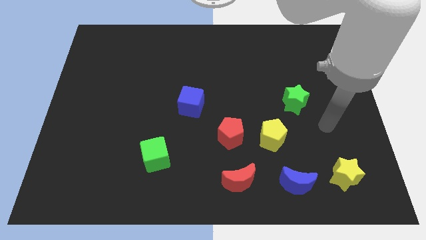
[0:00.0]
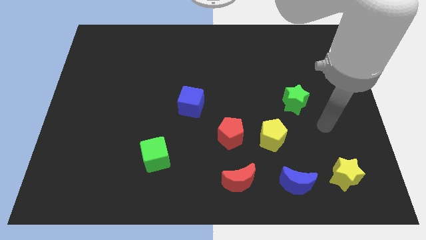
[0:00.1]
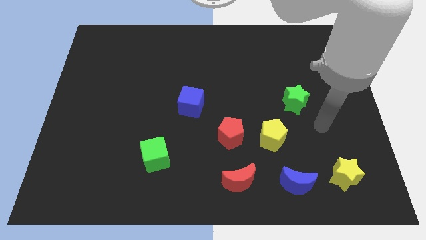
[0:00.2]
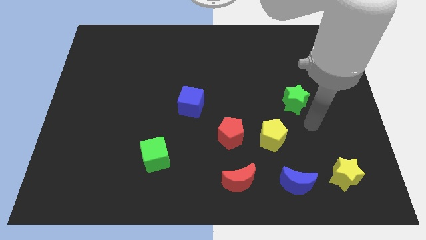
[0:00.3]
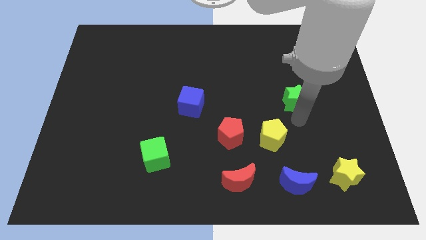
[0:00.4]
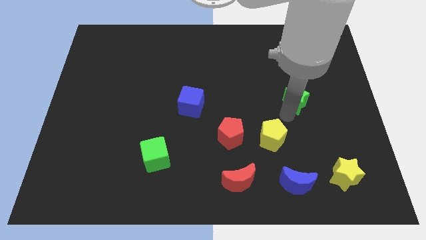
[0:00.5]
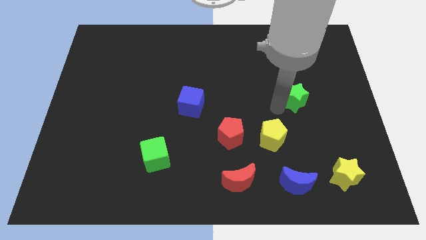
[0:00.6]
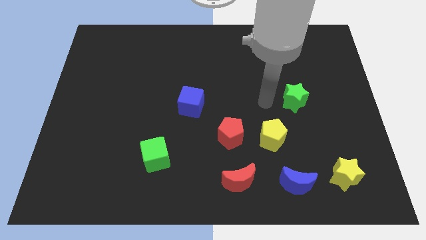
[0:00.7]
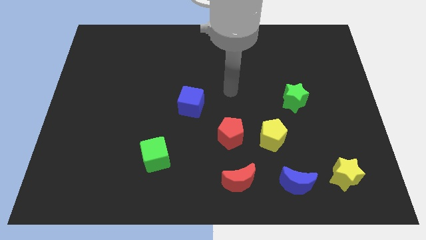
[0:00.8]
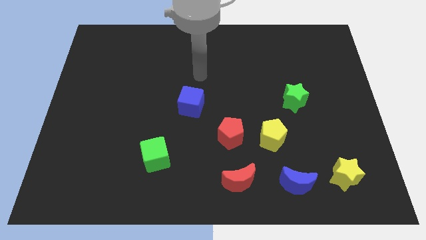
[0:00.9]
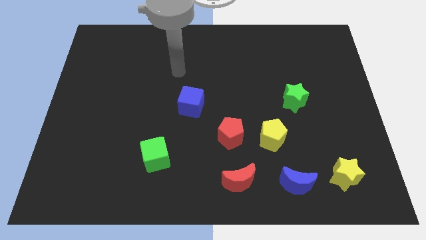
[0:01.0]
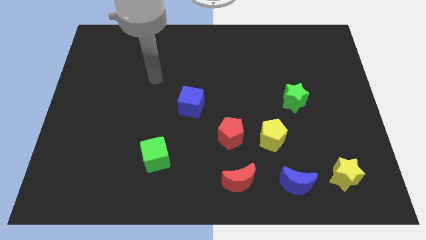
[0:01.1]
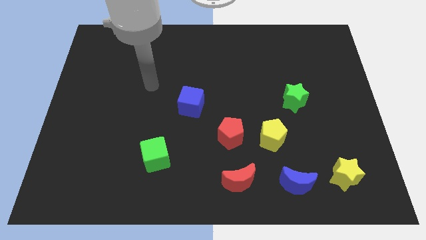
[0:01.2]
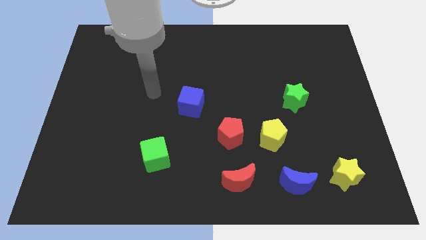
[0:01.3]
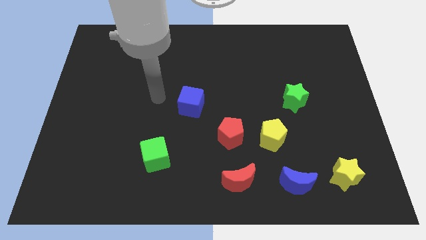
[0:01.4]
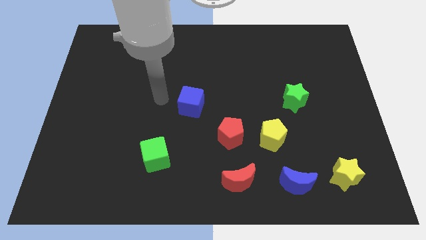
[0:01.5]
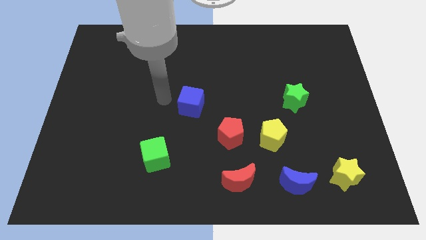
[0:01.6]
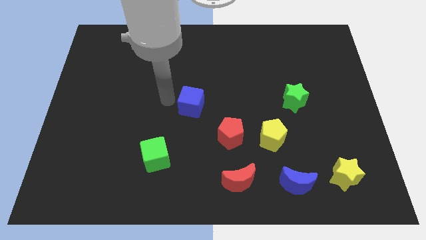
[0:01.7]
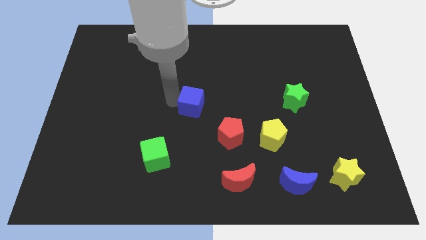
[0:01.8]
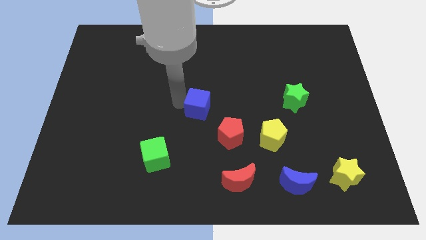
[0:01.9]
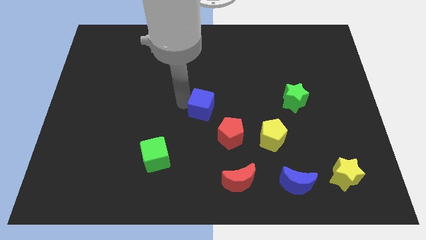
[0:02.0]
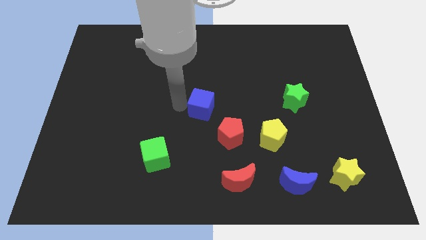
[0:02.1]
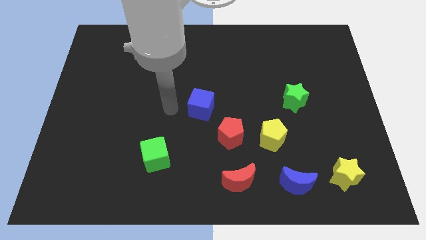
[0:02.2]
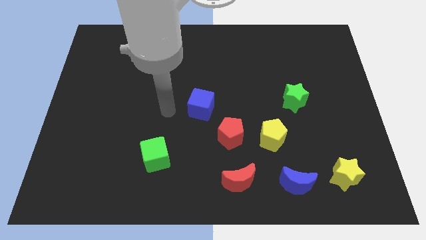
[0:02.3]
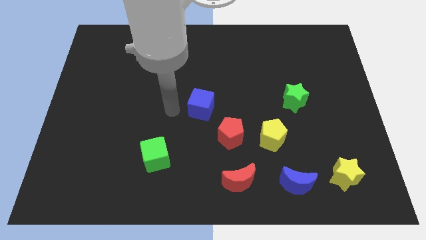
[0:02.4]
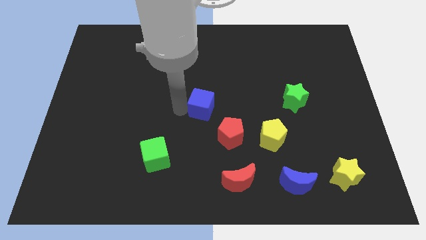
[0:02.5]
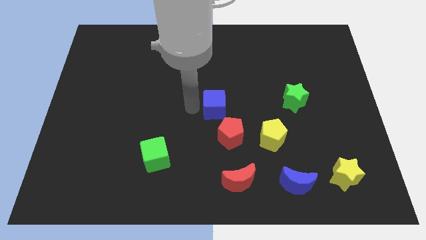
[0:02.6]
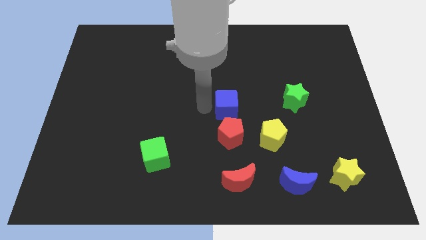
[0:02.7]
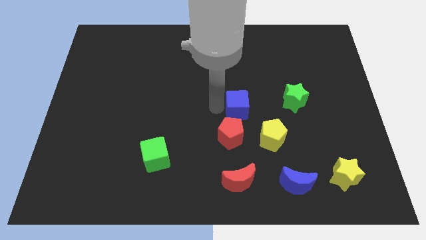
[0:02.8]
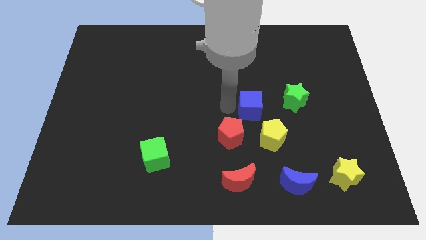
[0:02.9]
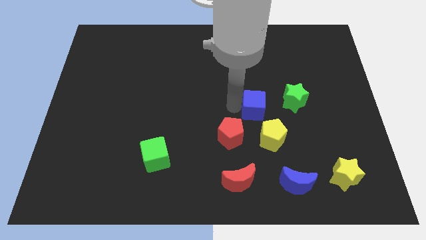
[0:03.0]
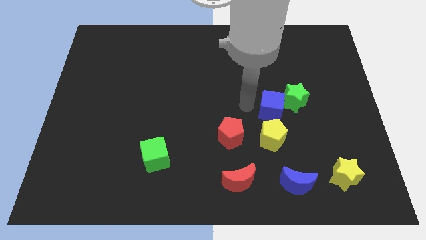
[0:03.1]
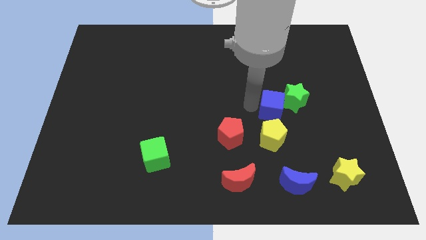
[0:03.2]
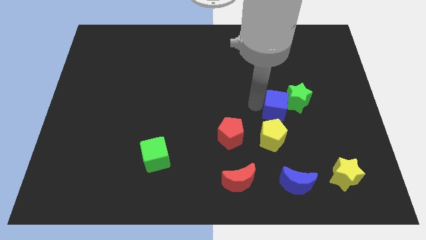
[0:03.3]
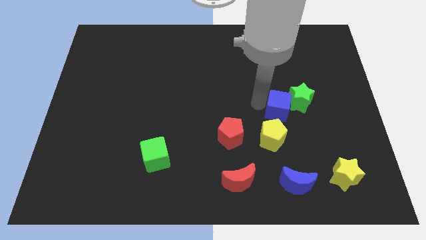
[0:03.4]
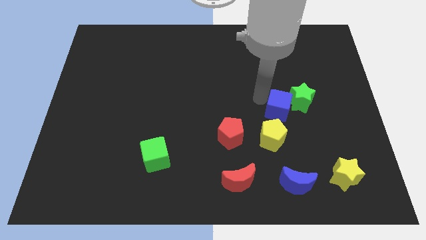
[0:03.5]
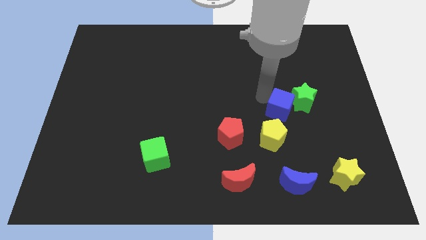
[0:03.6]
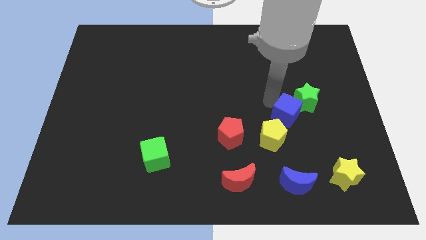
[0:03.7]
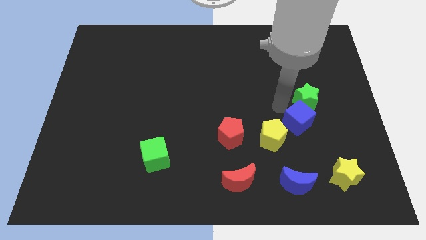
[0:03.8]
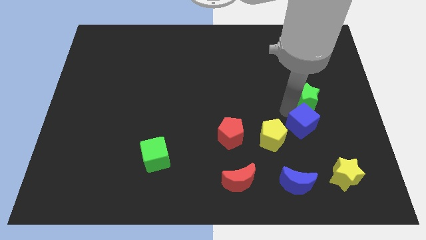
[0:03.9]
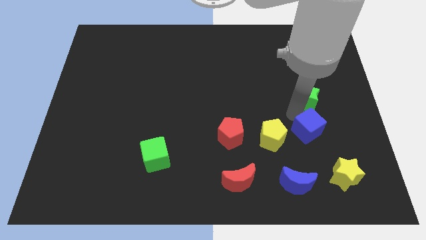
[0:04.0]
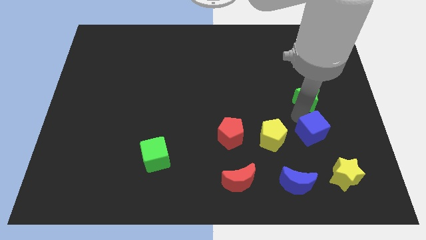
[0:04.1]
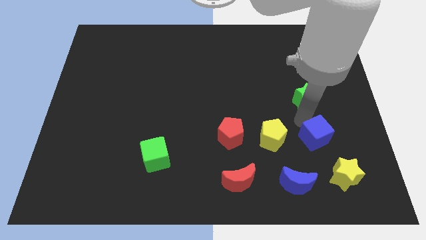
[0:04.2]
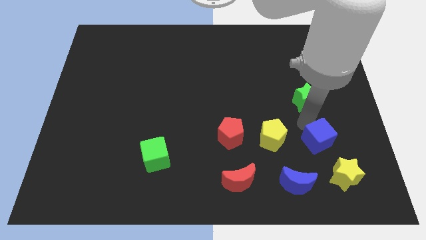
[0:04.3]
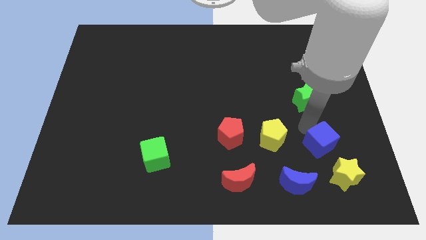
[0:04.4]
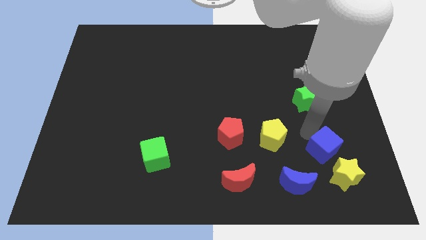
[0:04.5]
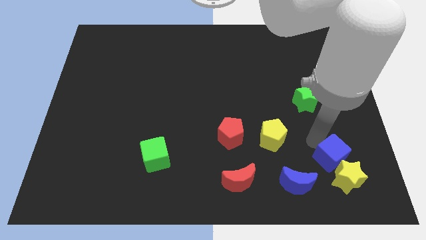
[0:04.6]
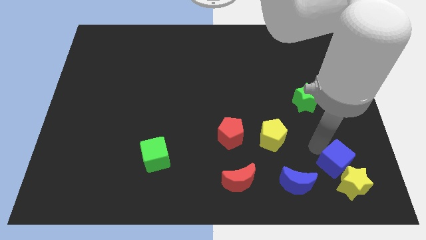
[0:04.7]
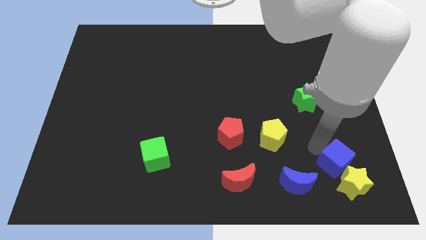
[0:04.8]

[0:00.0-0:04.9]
move the blue cube close to the yellow star

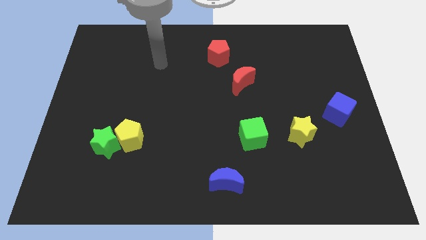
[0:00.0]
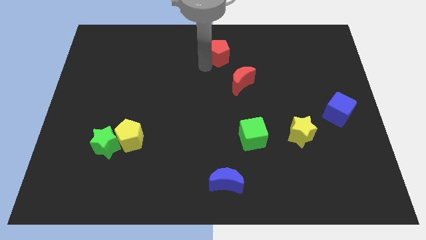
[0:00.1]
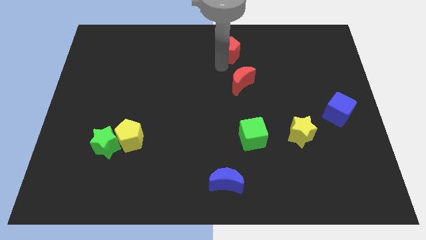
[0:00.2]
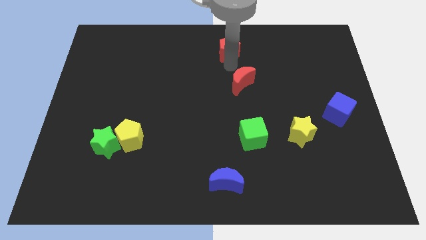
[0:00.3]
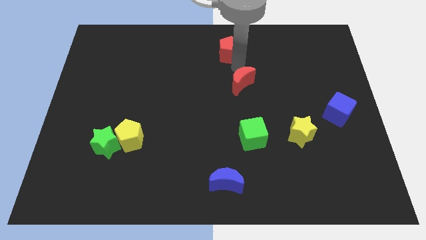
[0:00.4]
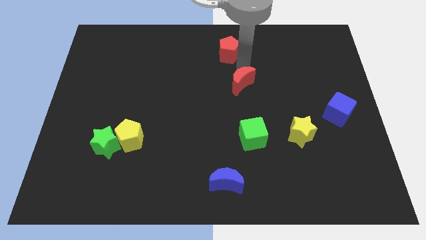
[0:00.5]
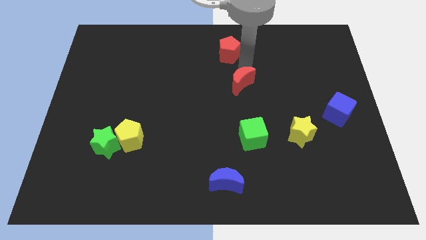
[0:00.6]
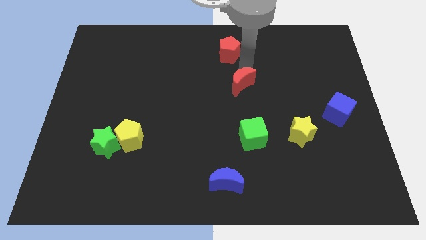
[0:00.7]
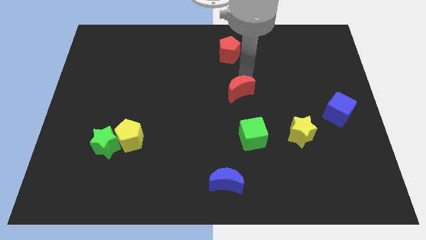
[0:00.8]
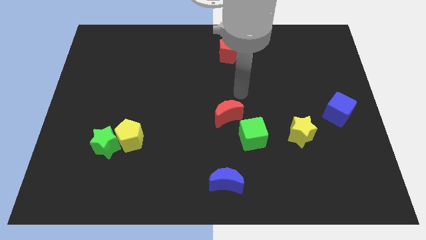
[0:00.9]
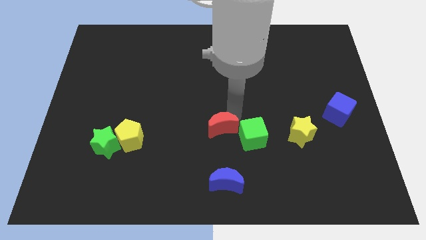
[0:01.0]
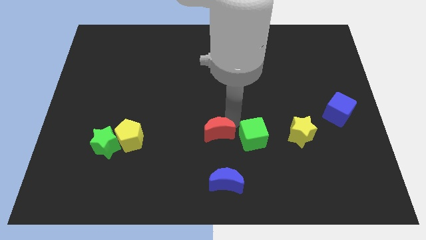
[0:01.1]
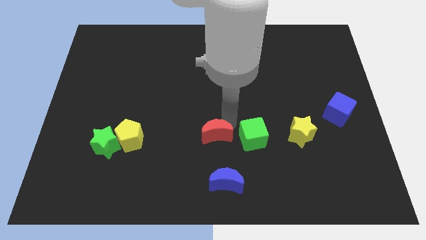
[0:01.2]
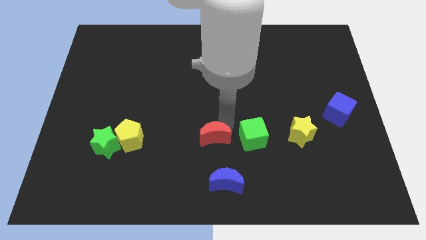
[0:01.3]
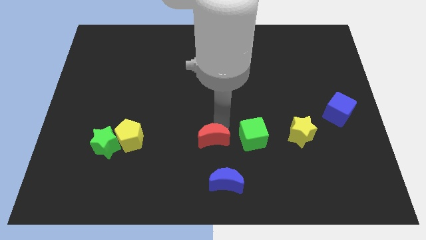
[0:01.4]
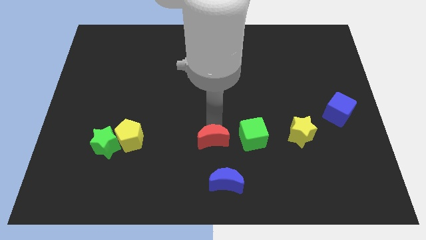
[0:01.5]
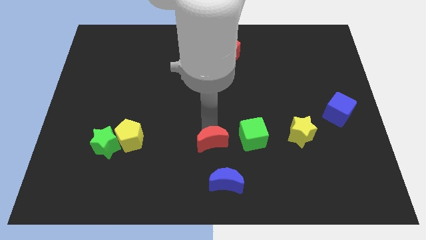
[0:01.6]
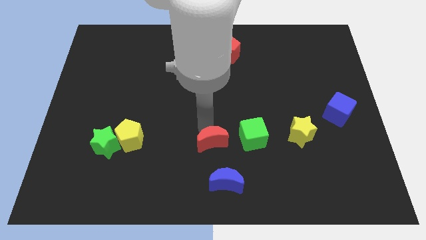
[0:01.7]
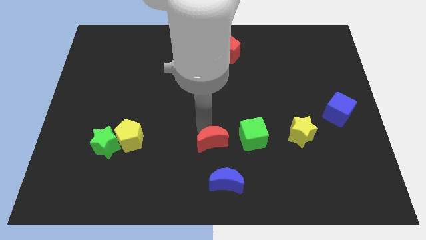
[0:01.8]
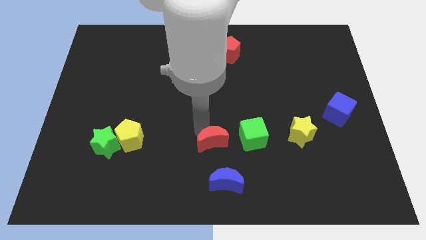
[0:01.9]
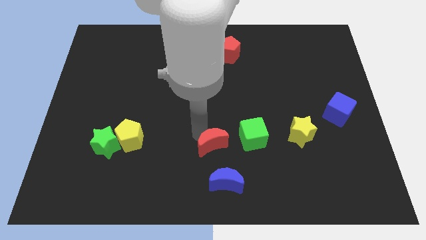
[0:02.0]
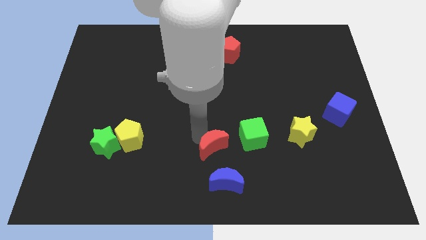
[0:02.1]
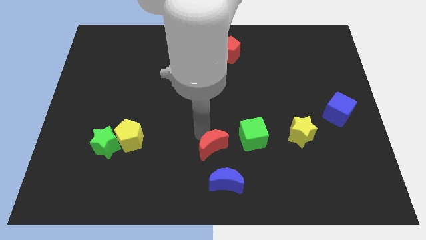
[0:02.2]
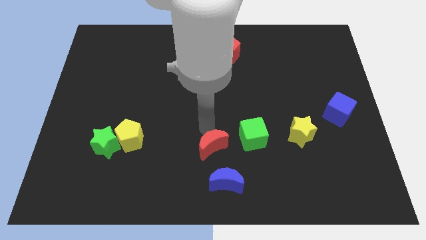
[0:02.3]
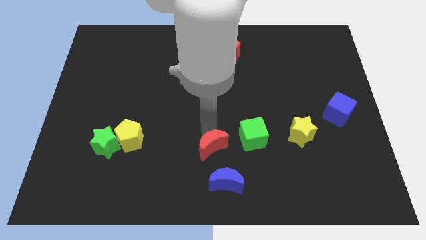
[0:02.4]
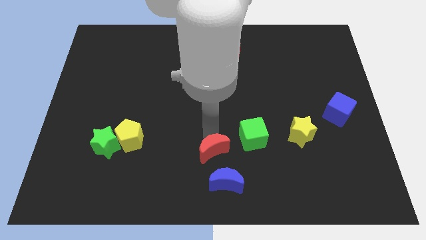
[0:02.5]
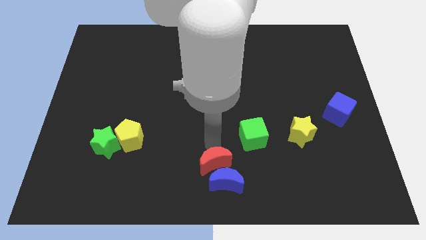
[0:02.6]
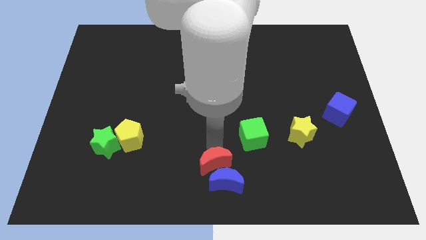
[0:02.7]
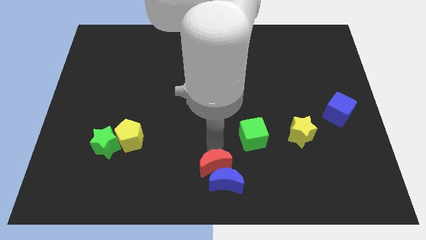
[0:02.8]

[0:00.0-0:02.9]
move the red moon close to the blue moon
